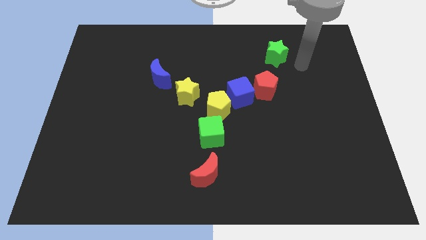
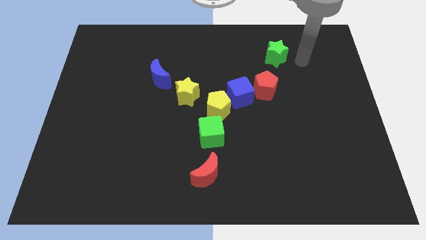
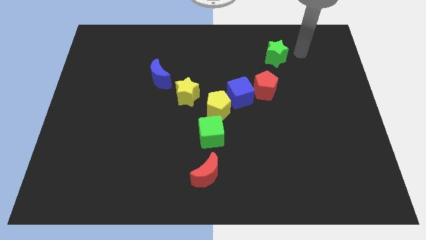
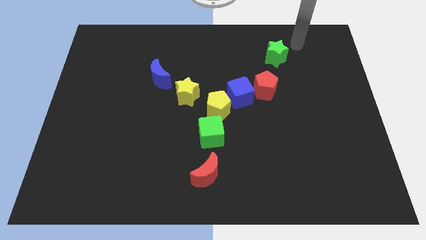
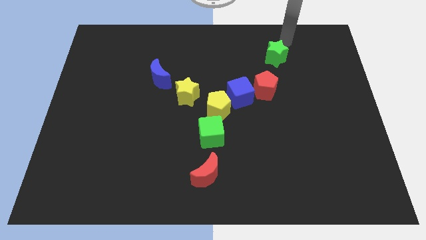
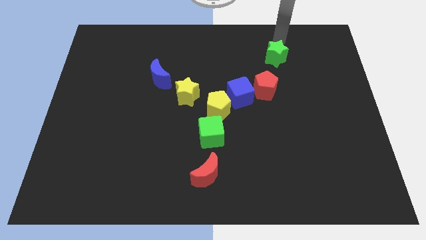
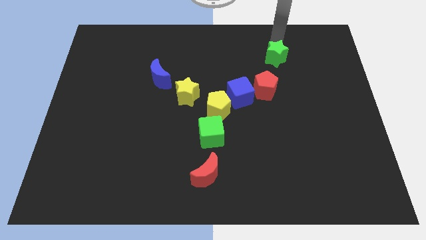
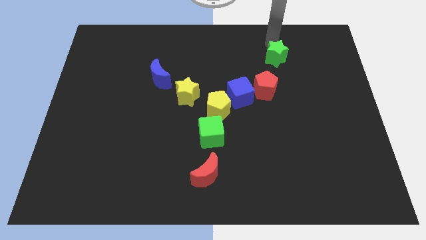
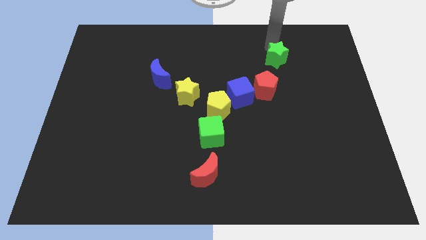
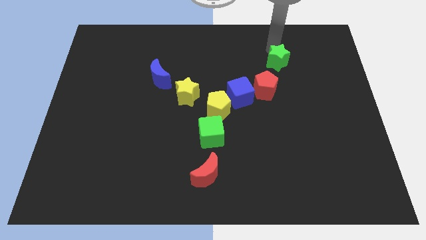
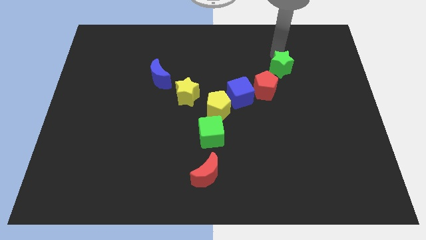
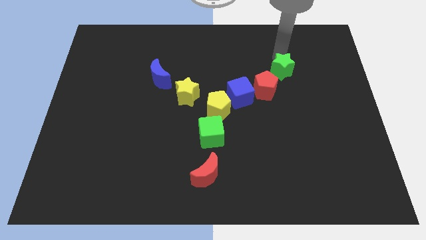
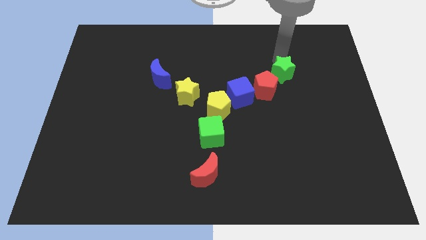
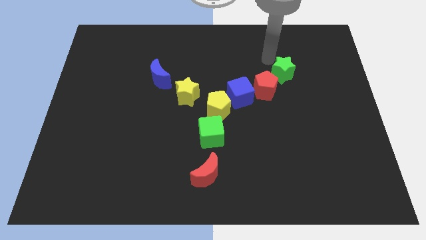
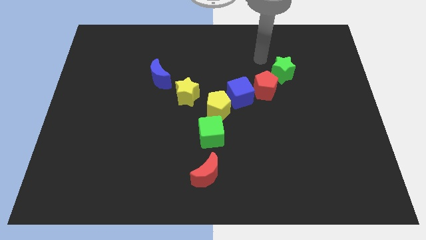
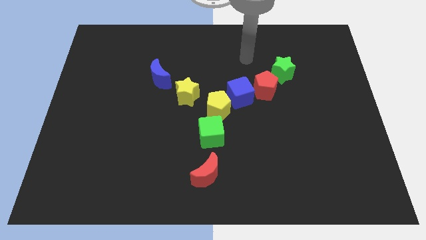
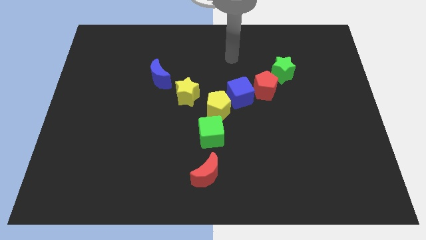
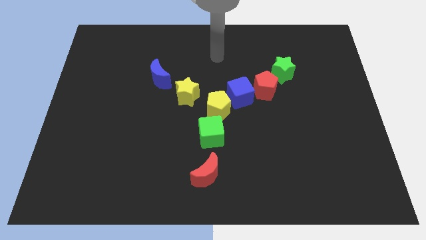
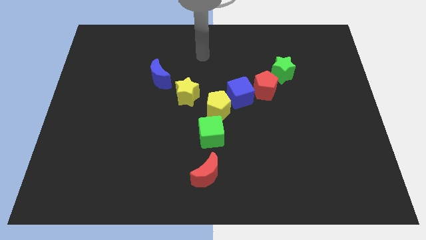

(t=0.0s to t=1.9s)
push the green star diagonal to the red pentagon

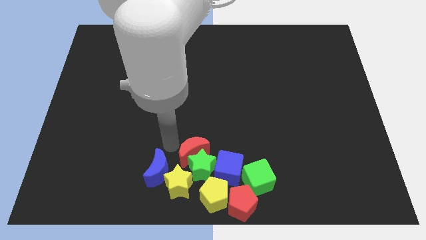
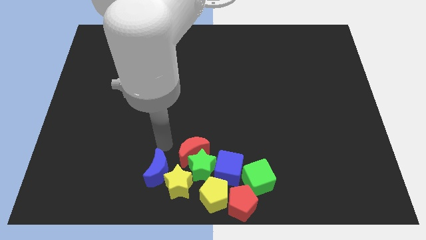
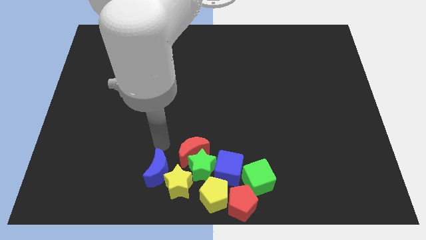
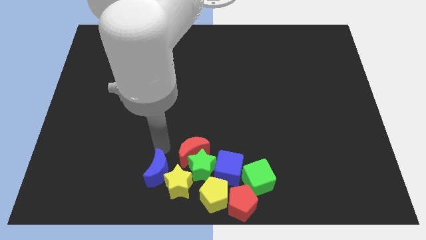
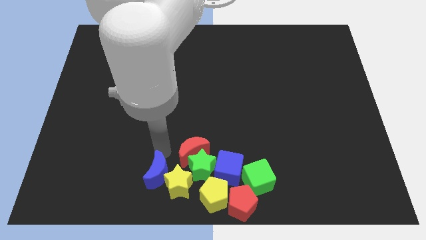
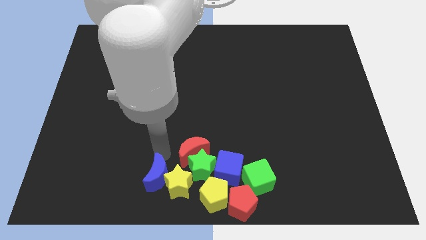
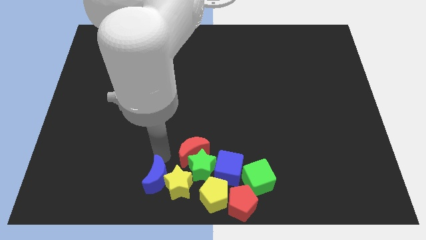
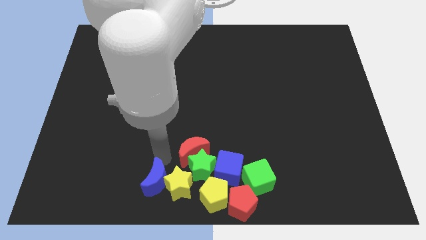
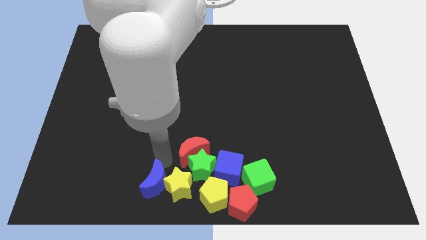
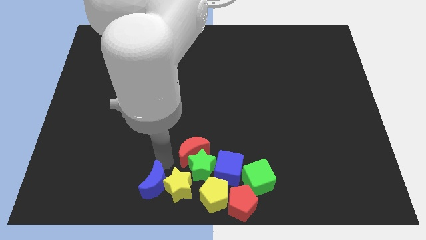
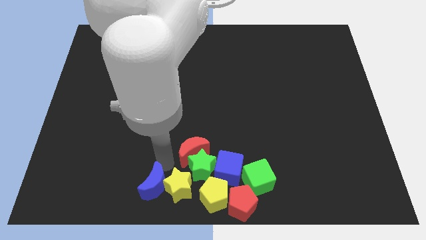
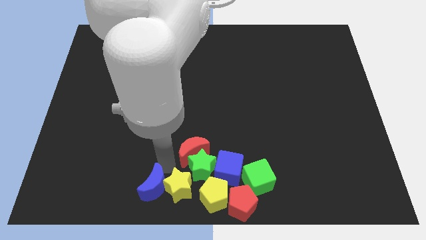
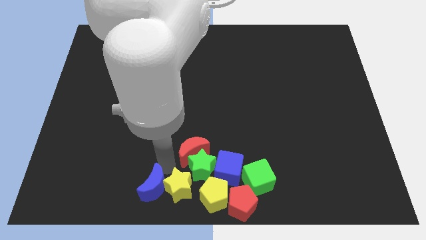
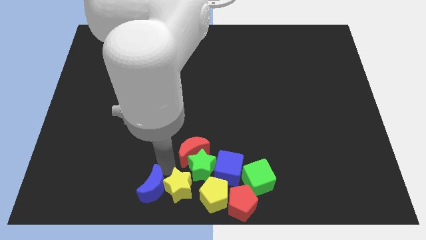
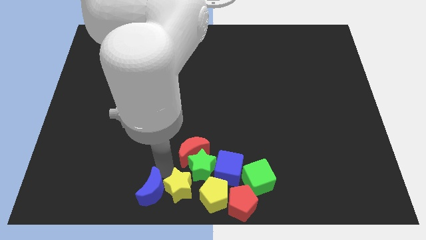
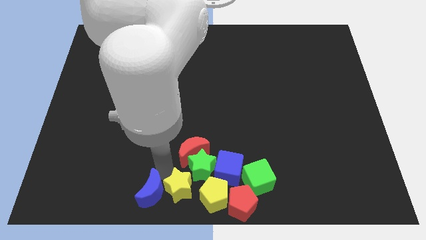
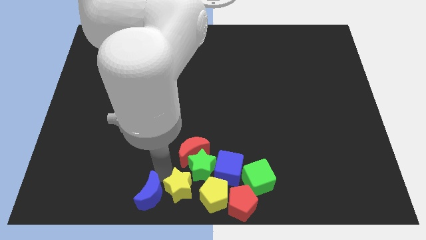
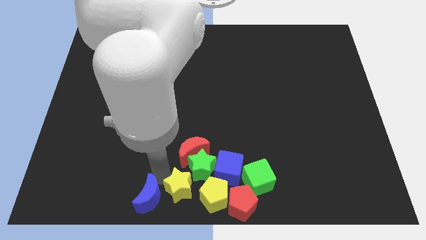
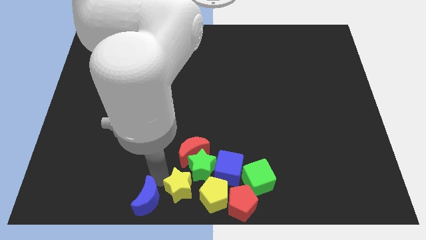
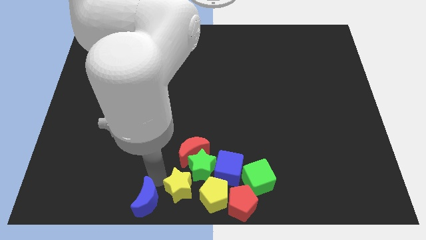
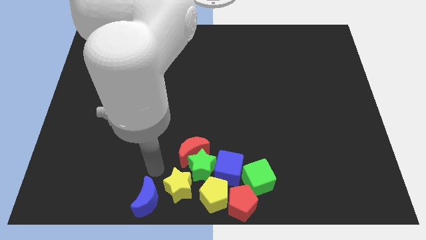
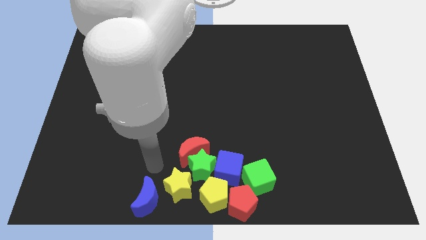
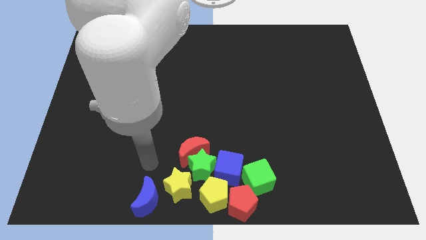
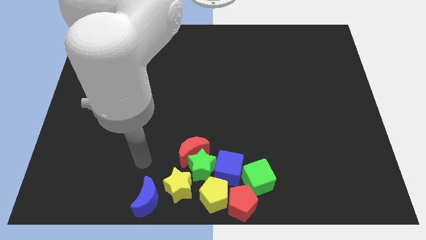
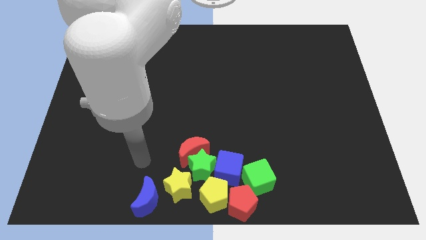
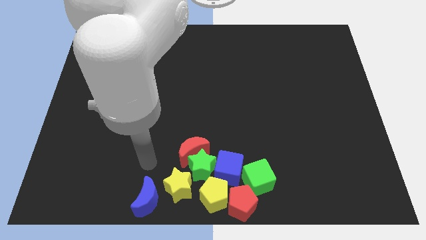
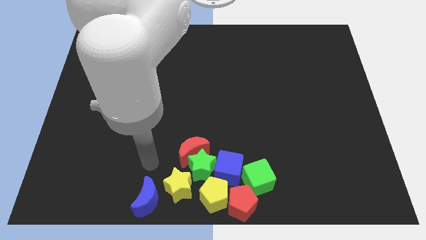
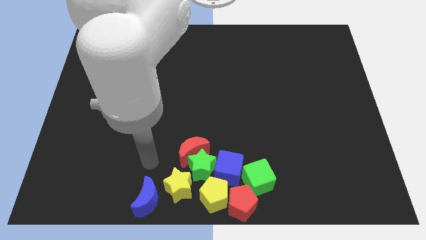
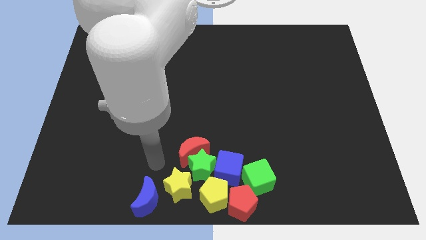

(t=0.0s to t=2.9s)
separate the blue moon from yellow star

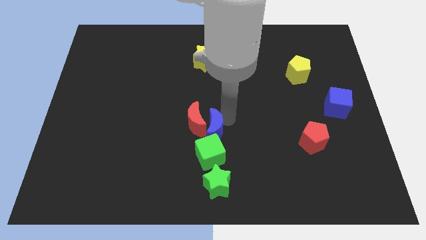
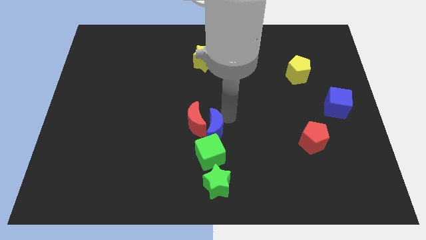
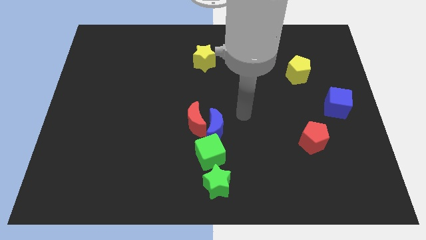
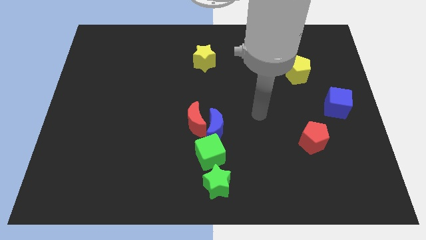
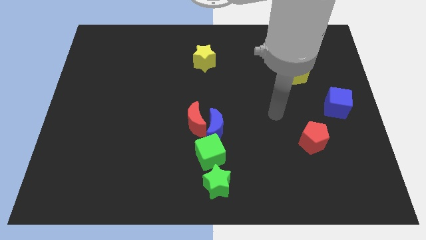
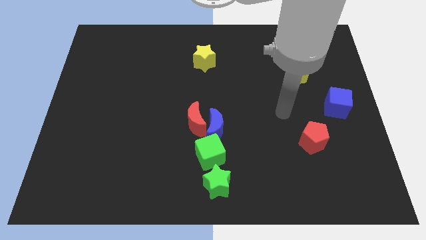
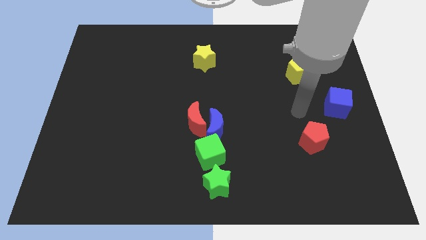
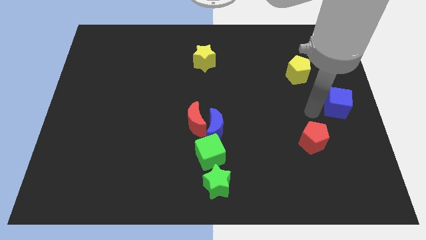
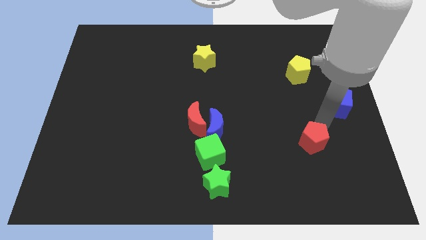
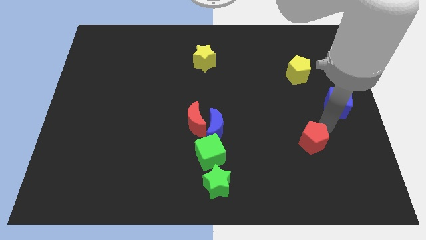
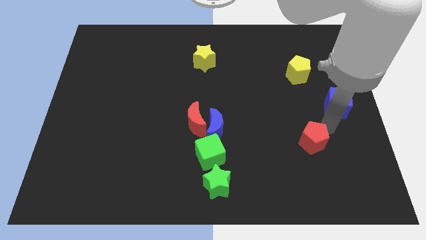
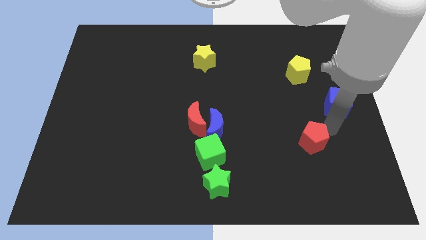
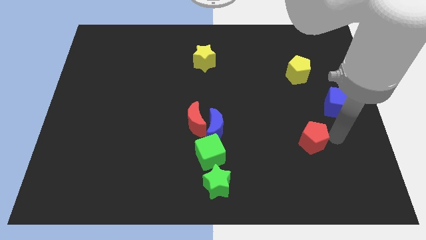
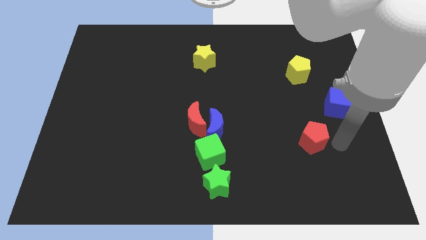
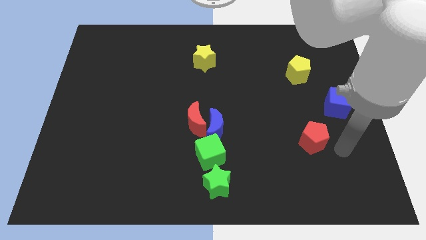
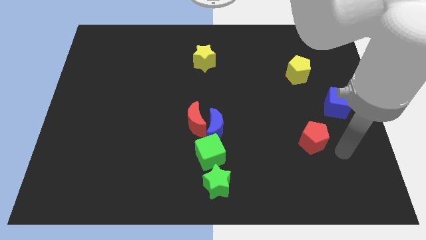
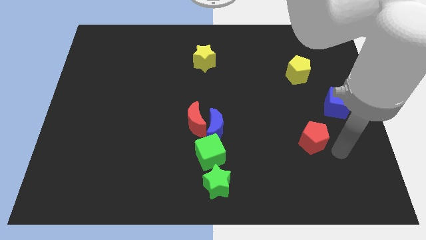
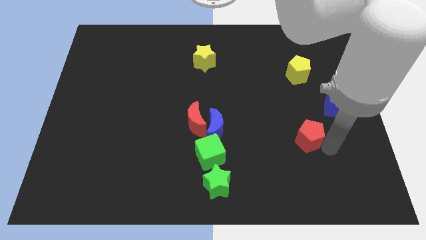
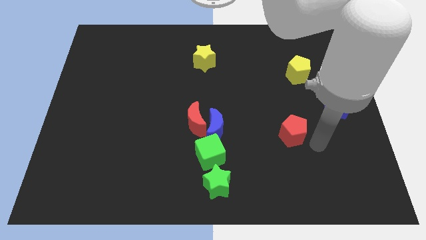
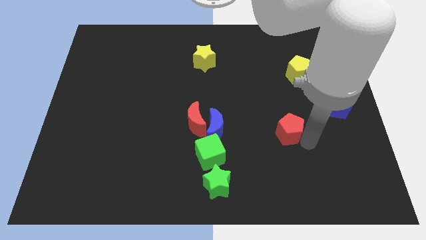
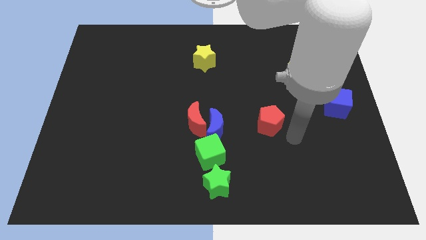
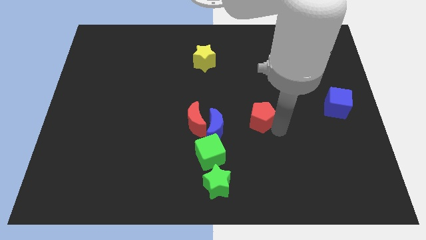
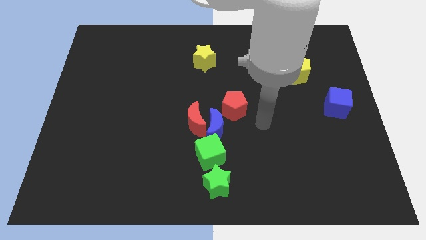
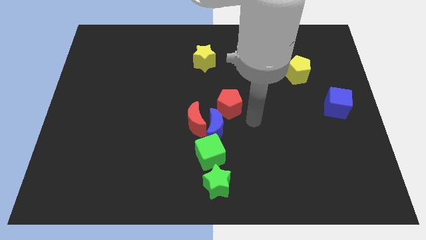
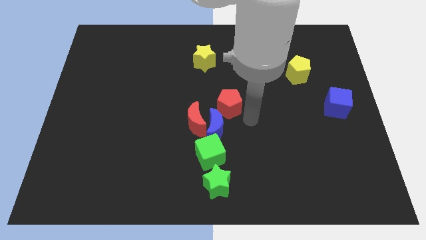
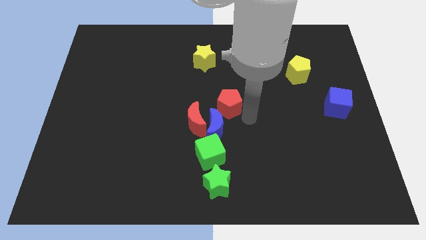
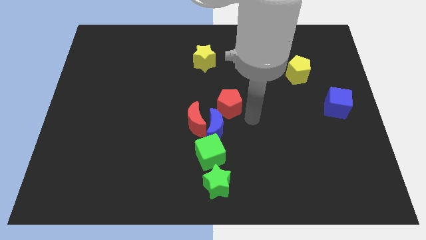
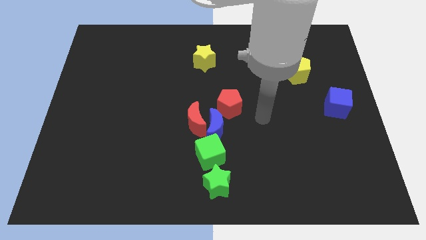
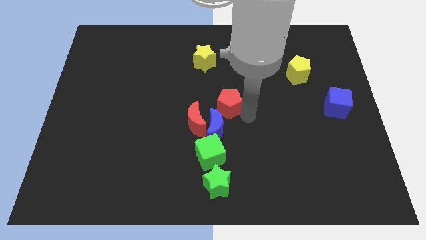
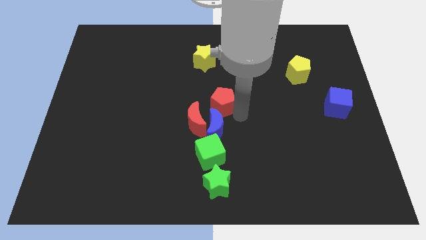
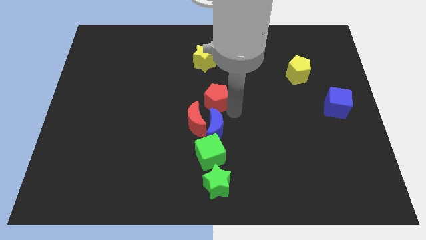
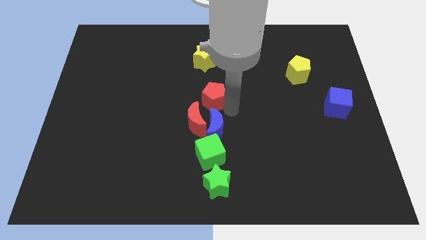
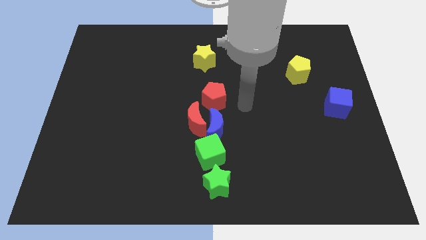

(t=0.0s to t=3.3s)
place the red pentagon above the top side of the blue moon

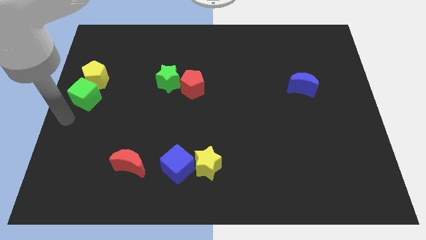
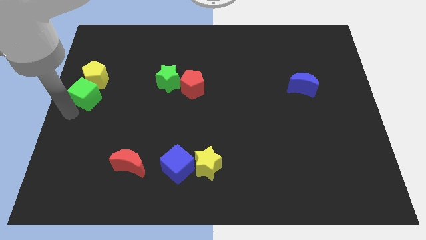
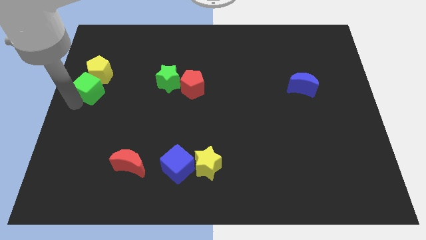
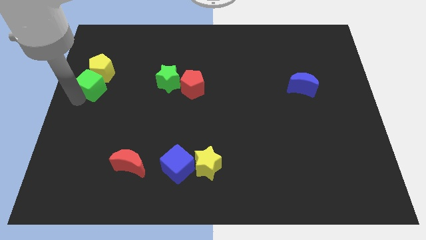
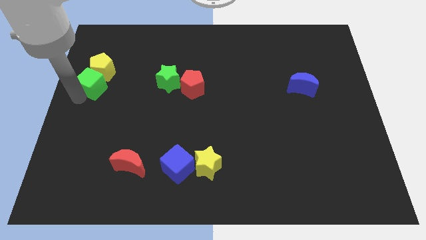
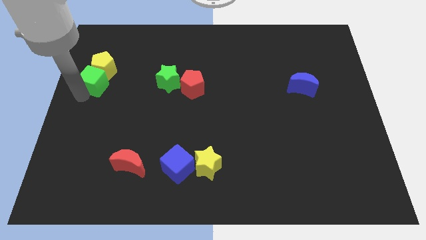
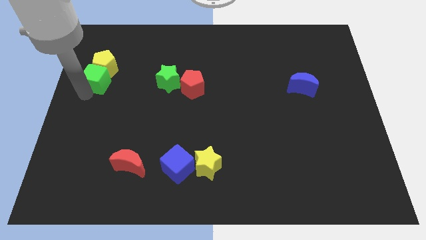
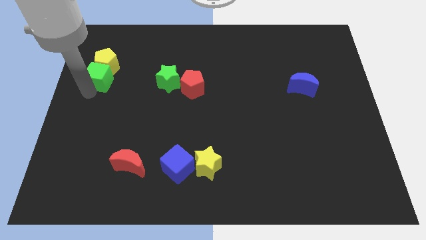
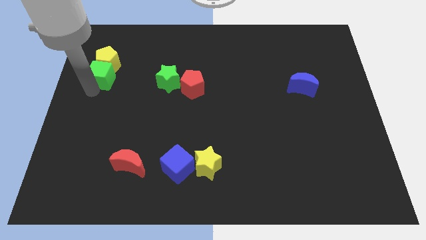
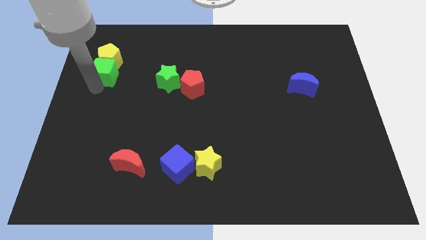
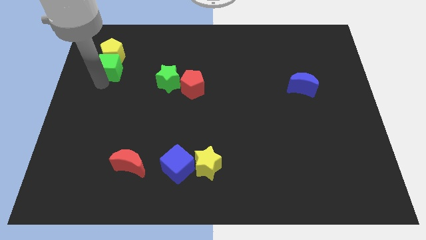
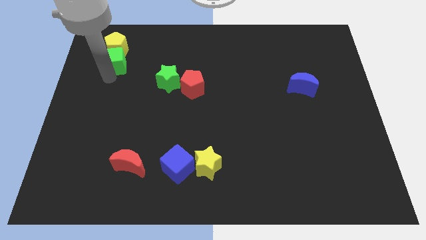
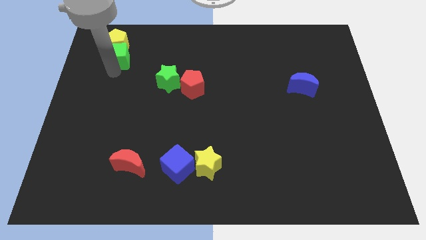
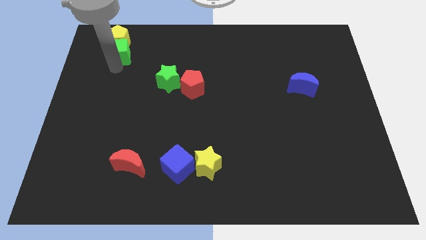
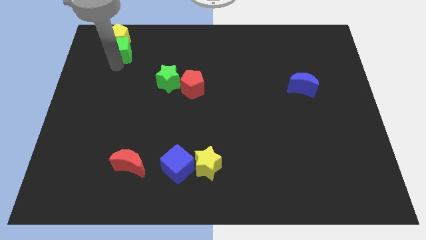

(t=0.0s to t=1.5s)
push the green cube and yellow pentagon to the top left side
